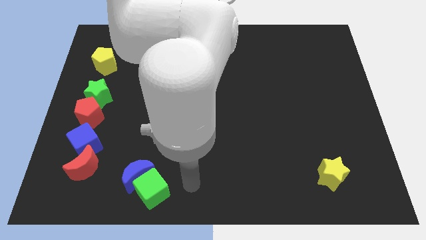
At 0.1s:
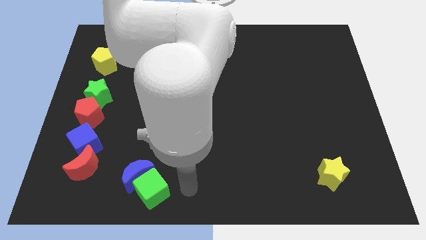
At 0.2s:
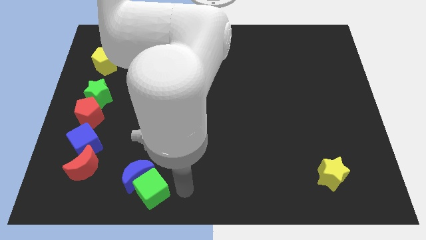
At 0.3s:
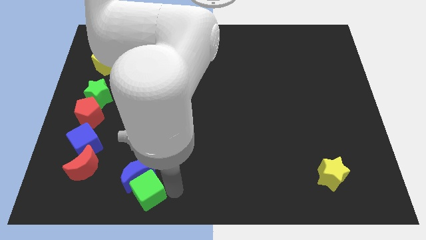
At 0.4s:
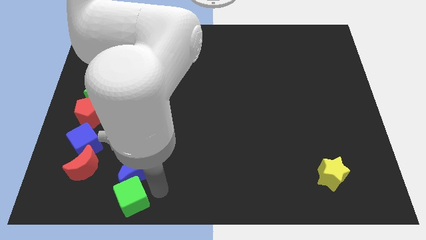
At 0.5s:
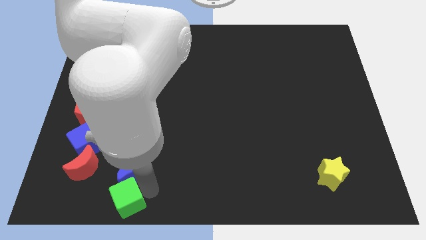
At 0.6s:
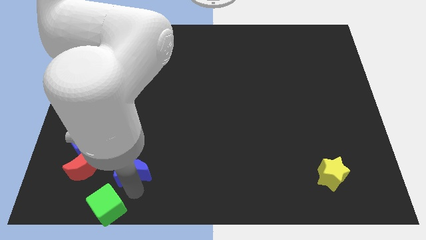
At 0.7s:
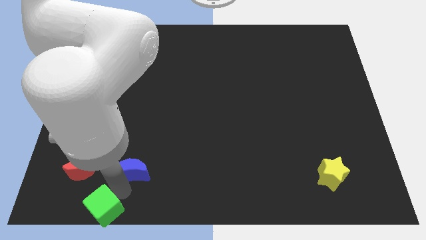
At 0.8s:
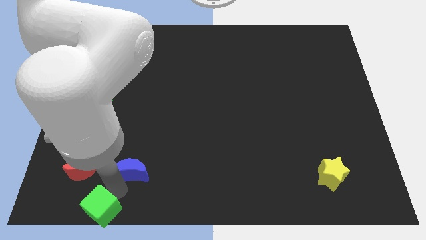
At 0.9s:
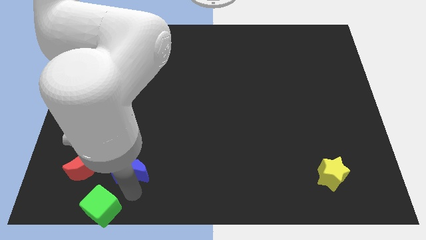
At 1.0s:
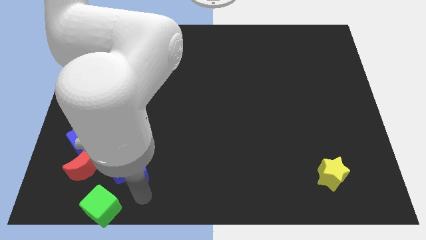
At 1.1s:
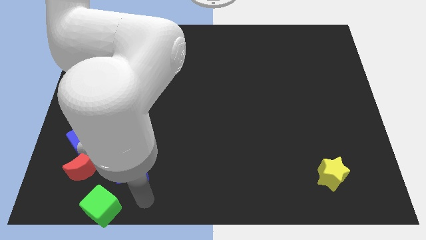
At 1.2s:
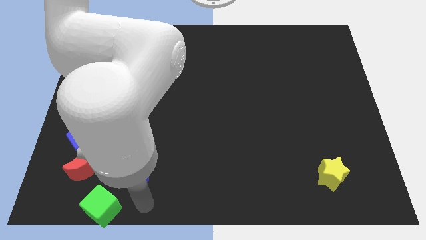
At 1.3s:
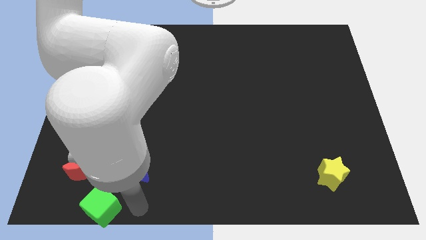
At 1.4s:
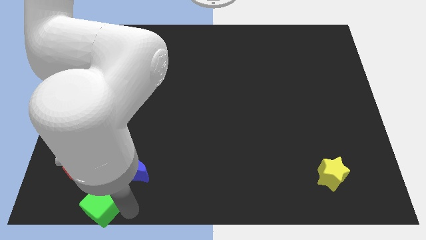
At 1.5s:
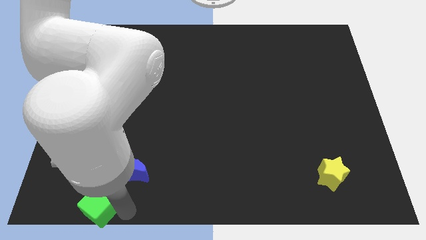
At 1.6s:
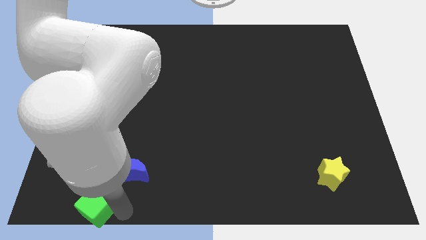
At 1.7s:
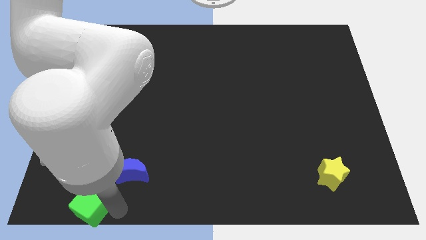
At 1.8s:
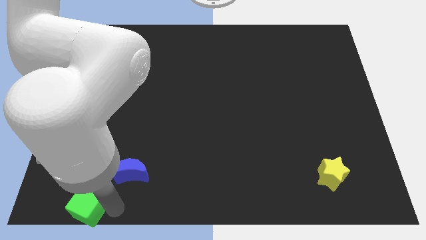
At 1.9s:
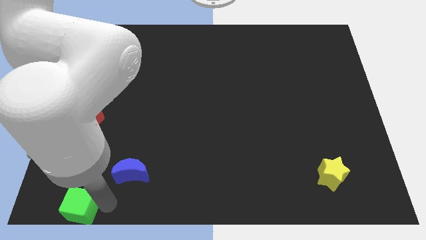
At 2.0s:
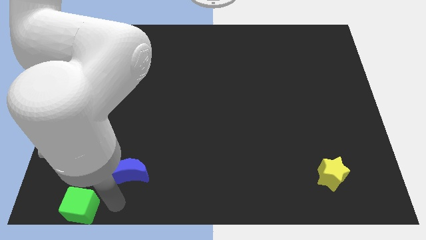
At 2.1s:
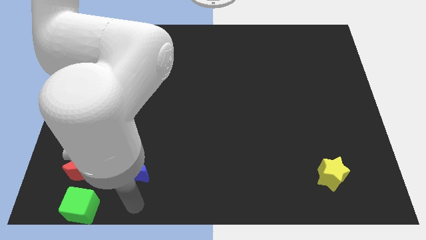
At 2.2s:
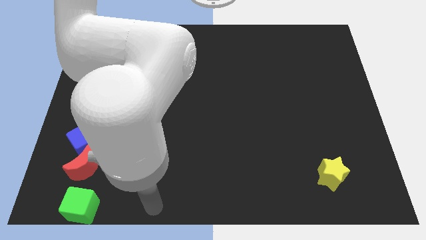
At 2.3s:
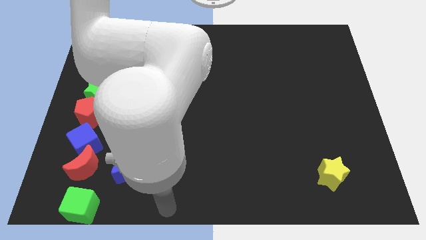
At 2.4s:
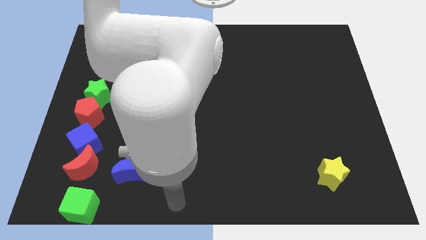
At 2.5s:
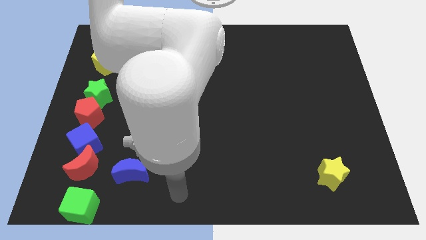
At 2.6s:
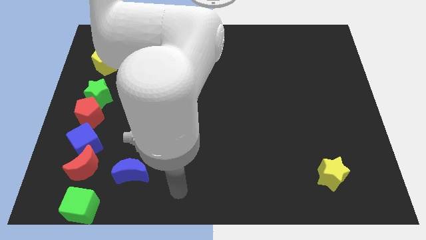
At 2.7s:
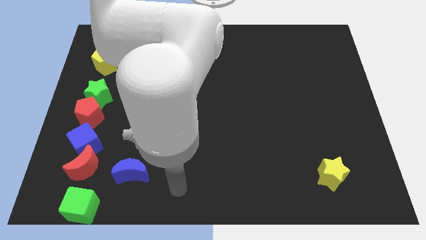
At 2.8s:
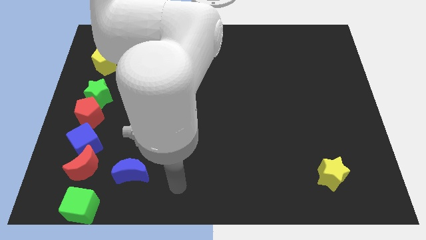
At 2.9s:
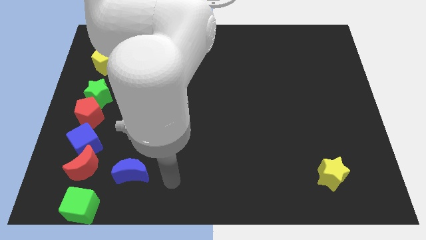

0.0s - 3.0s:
separate the green cube and blue moon

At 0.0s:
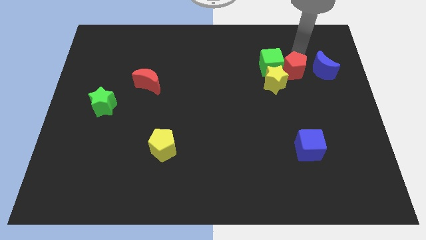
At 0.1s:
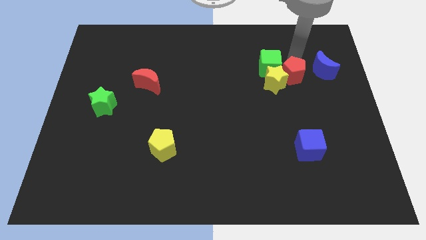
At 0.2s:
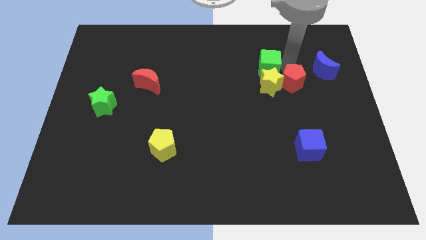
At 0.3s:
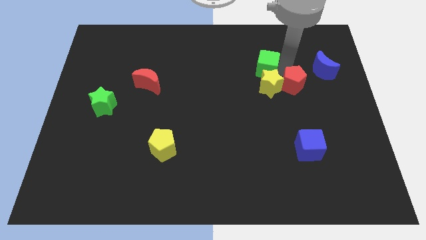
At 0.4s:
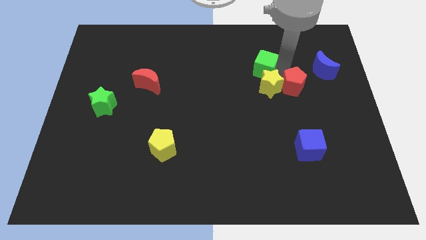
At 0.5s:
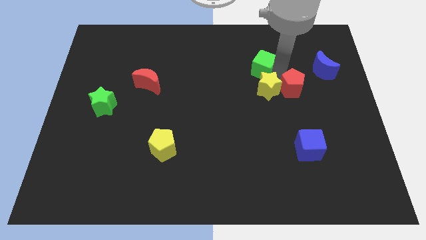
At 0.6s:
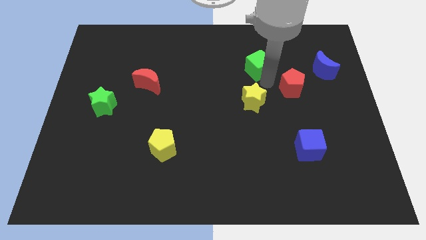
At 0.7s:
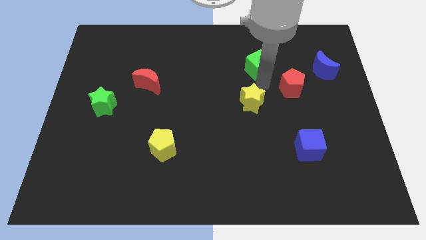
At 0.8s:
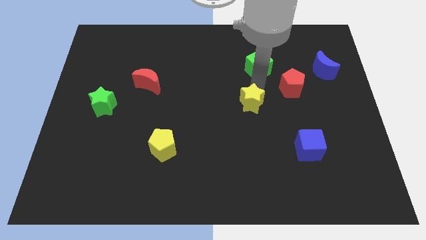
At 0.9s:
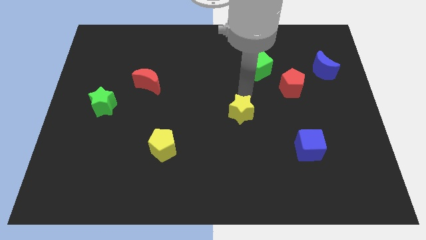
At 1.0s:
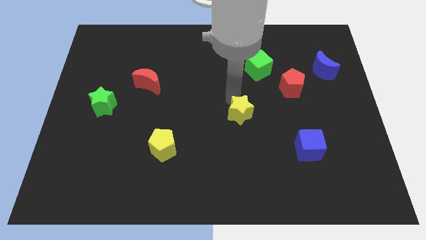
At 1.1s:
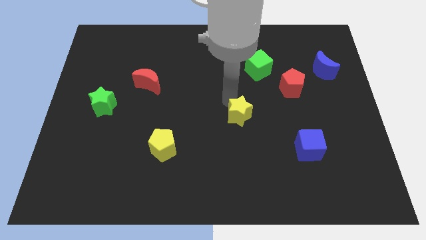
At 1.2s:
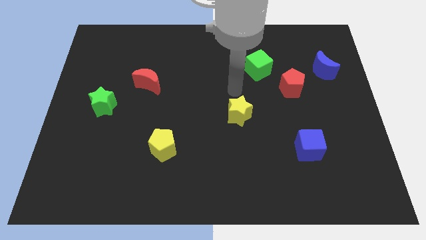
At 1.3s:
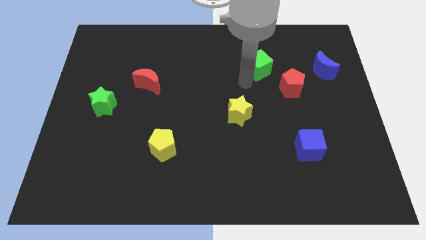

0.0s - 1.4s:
apart yellow star from red pentagon

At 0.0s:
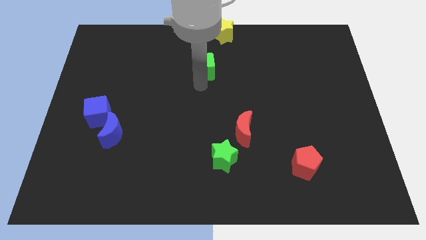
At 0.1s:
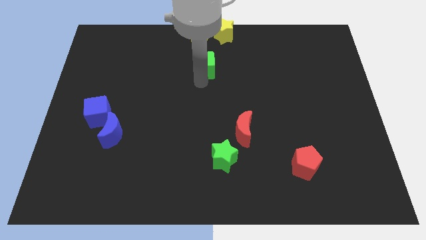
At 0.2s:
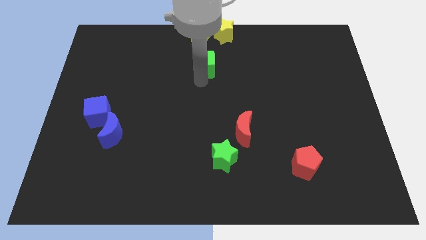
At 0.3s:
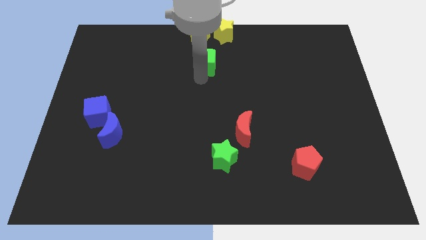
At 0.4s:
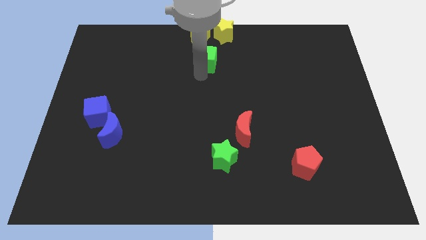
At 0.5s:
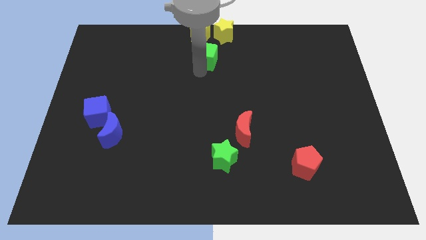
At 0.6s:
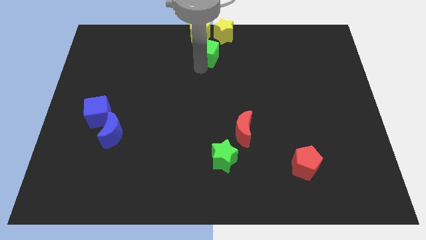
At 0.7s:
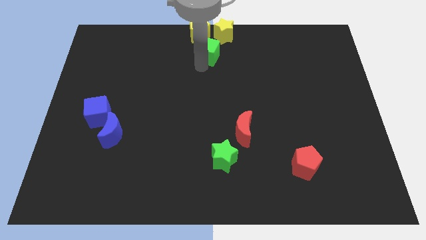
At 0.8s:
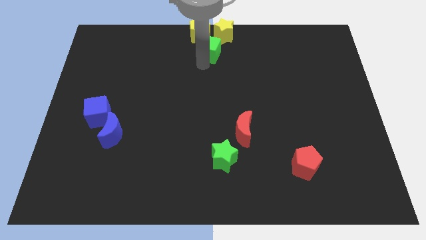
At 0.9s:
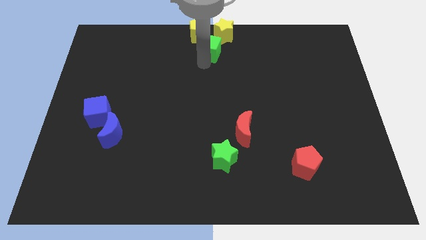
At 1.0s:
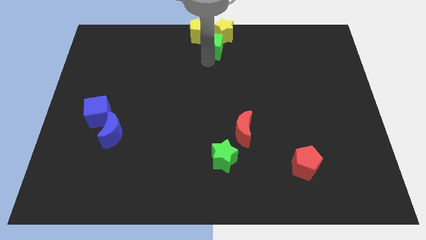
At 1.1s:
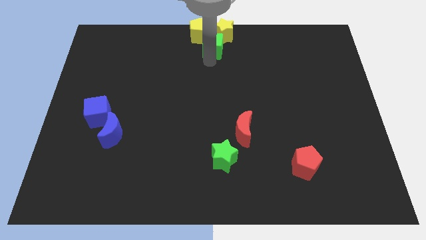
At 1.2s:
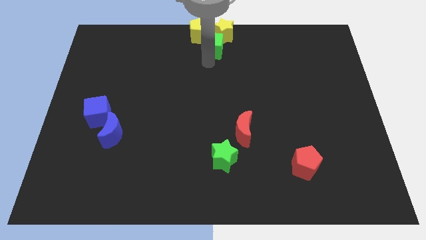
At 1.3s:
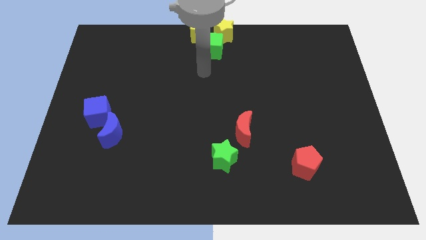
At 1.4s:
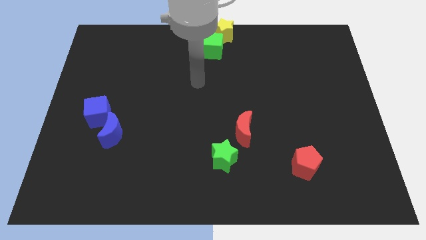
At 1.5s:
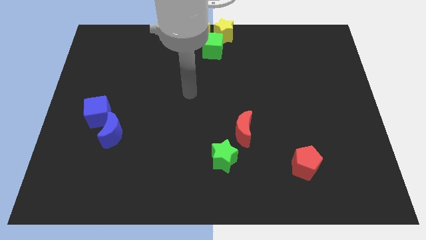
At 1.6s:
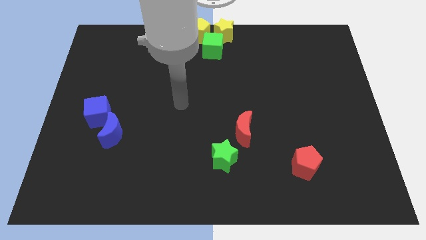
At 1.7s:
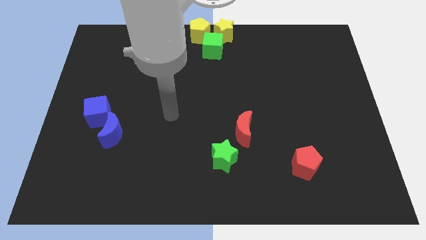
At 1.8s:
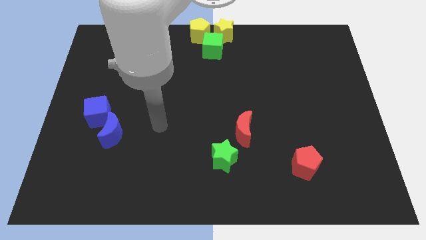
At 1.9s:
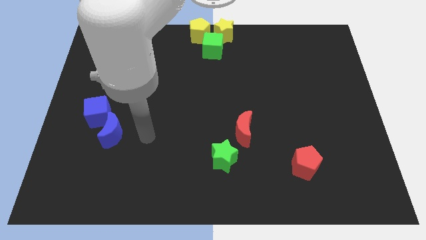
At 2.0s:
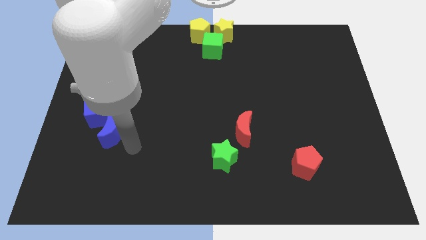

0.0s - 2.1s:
move the arm towards the blue crescent

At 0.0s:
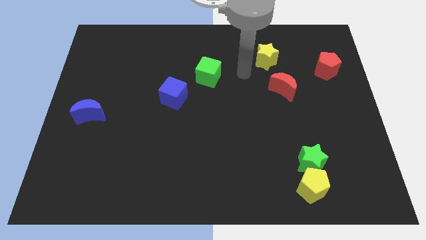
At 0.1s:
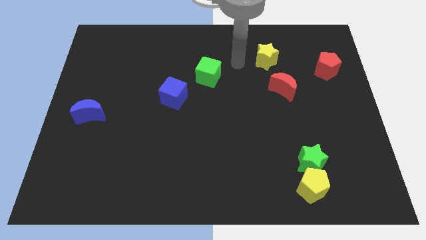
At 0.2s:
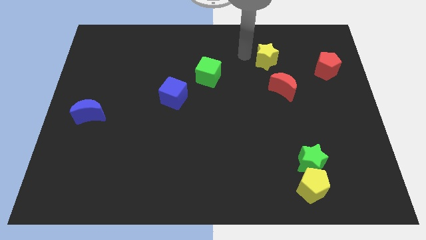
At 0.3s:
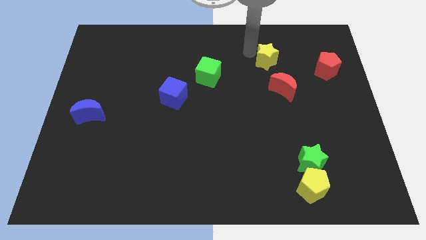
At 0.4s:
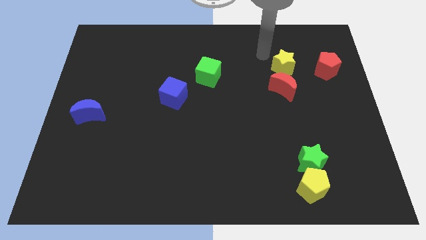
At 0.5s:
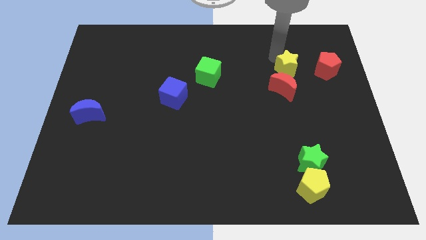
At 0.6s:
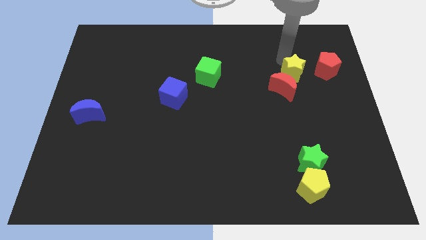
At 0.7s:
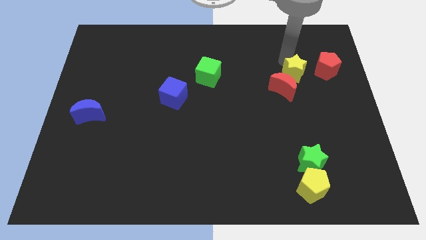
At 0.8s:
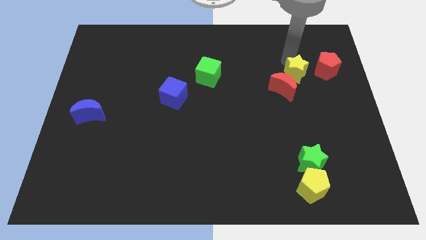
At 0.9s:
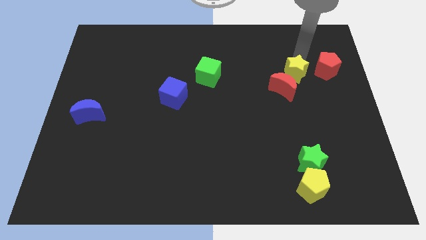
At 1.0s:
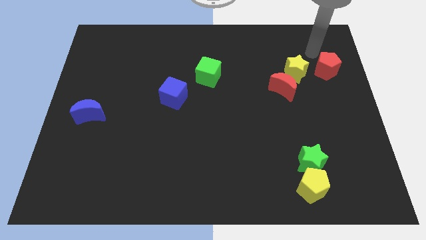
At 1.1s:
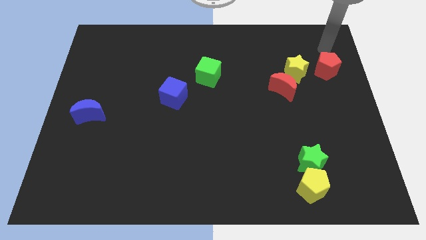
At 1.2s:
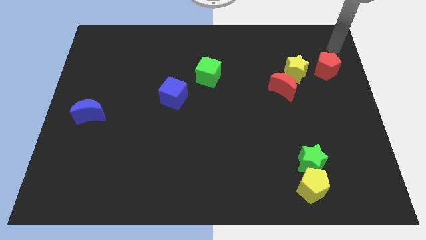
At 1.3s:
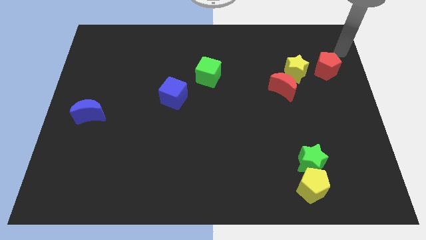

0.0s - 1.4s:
place yellow star in between red moon and red pentagon

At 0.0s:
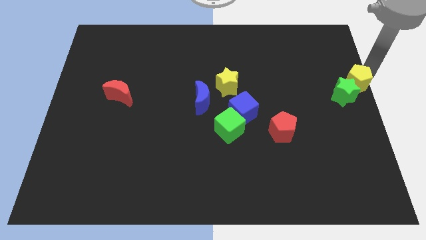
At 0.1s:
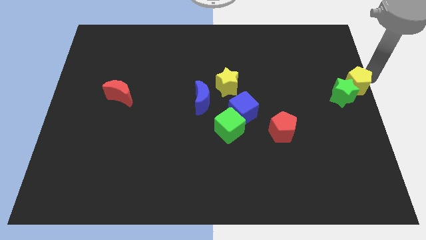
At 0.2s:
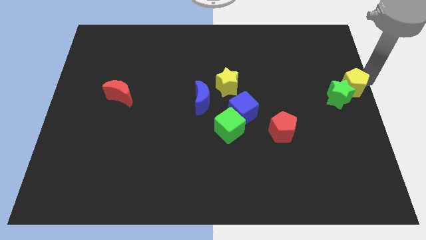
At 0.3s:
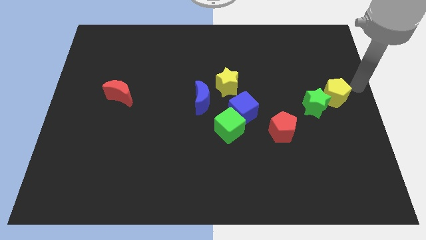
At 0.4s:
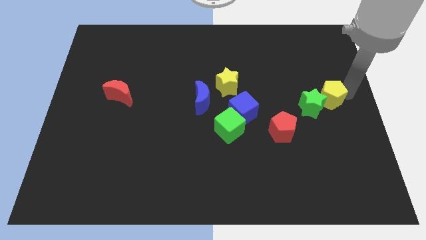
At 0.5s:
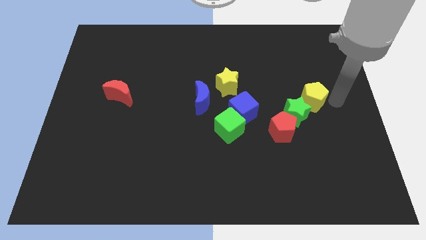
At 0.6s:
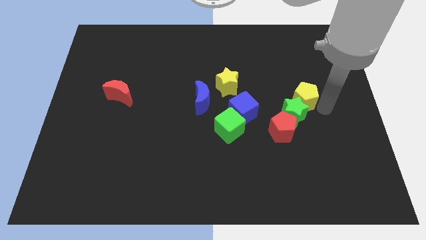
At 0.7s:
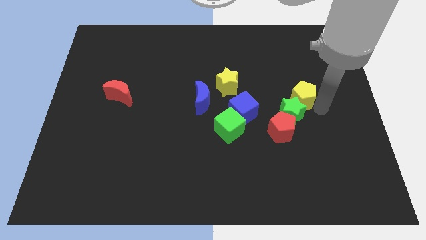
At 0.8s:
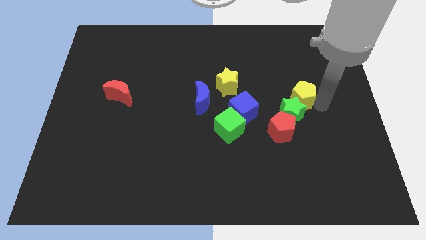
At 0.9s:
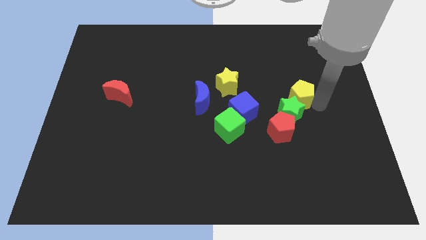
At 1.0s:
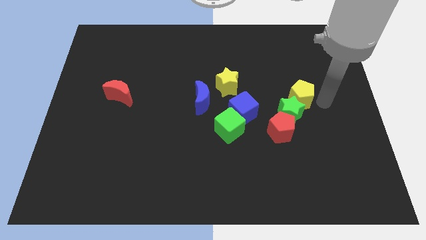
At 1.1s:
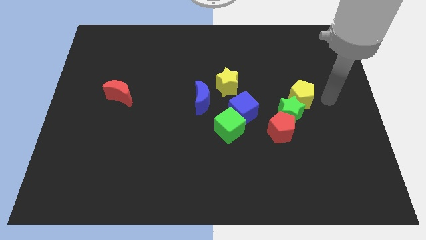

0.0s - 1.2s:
move the yellow pentagon along with green star into the red pentagon
